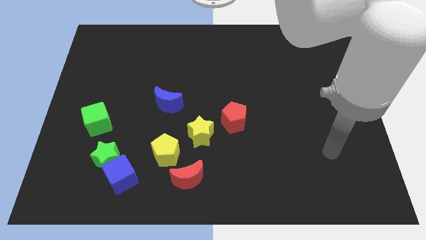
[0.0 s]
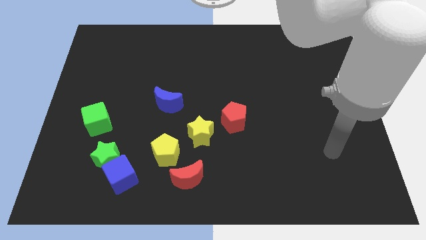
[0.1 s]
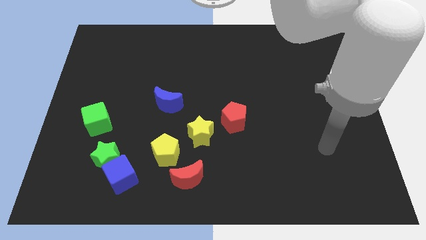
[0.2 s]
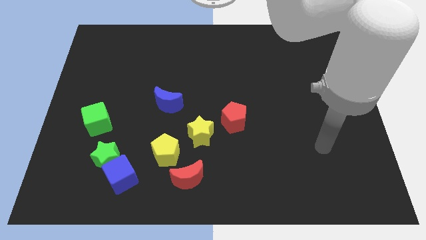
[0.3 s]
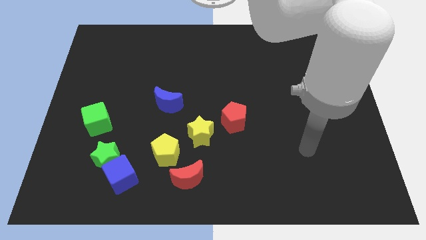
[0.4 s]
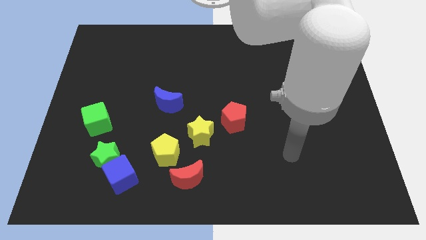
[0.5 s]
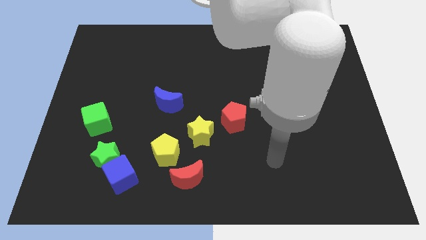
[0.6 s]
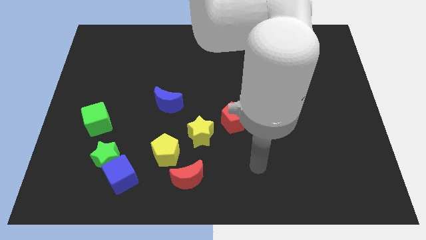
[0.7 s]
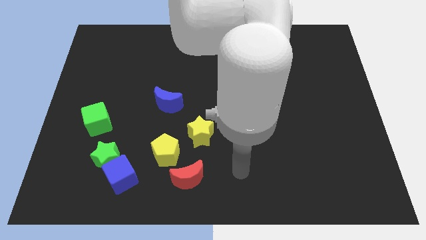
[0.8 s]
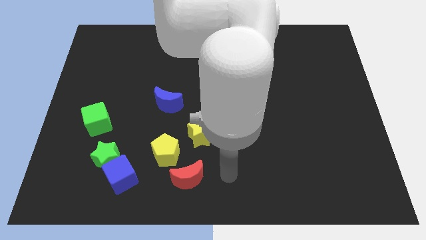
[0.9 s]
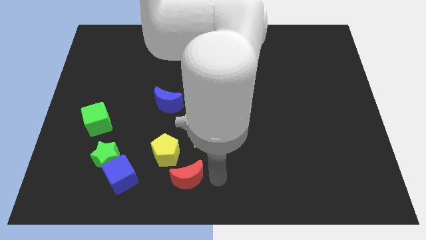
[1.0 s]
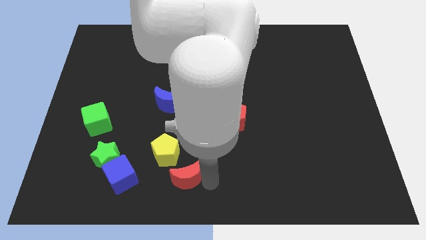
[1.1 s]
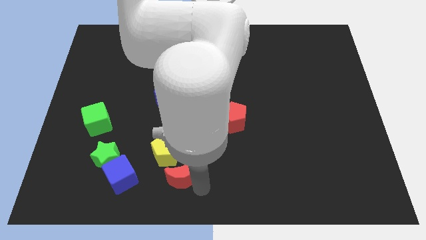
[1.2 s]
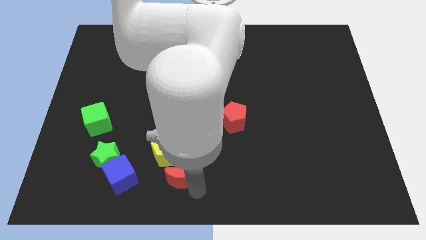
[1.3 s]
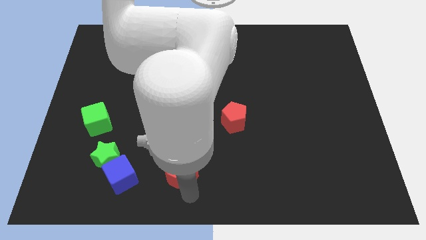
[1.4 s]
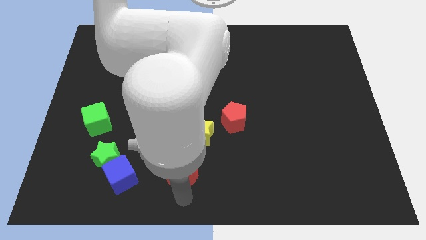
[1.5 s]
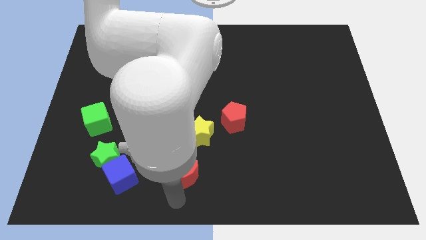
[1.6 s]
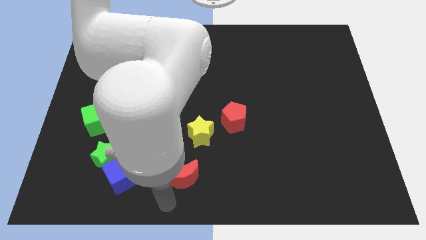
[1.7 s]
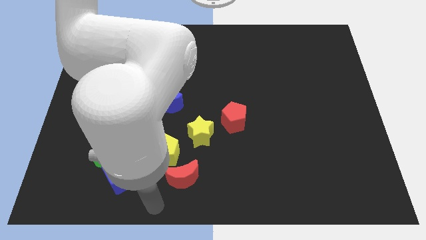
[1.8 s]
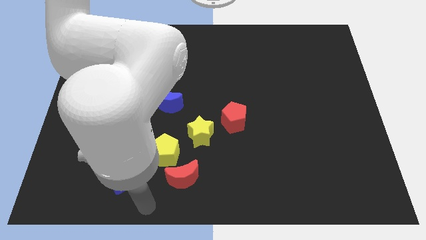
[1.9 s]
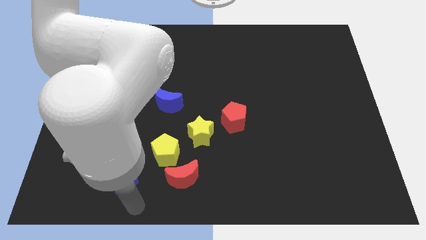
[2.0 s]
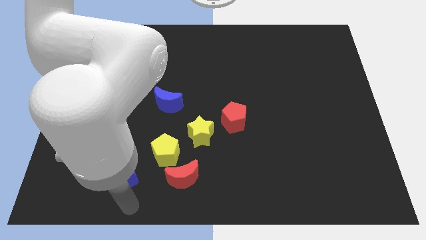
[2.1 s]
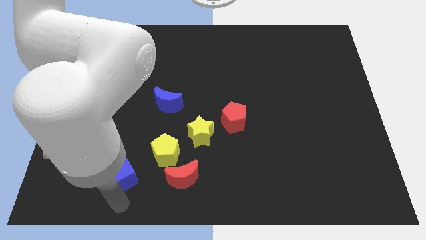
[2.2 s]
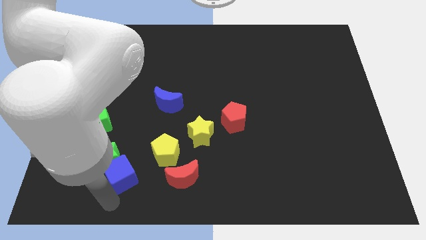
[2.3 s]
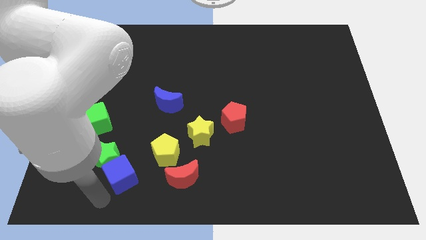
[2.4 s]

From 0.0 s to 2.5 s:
move the blue cube into the yellow pentagon

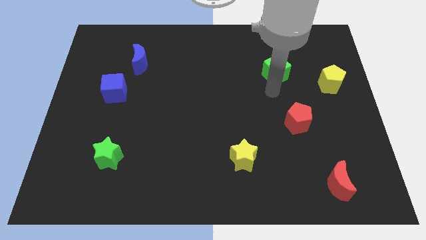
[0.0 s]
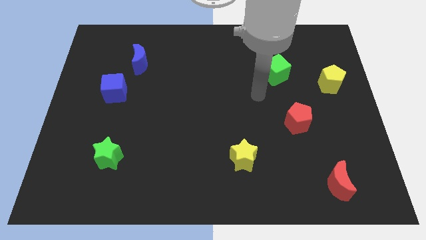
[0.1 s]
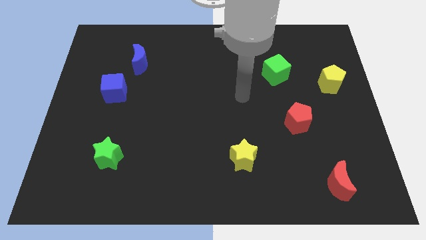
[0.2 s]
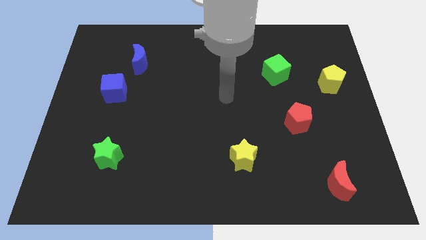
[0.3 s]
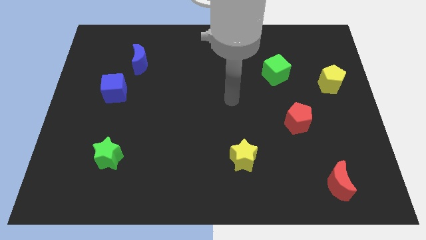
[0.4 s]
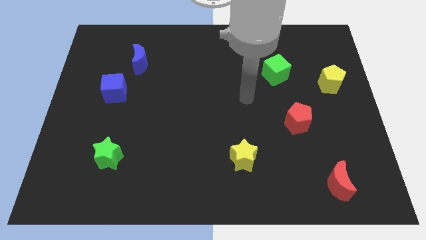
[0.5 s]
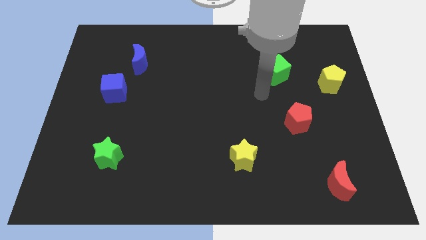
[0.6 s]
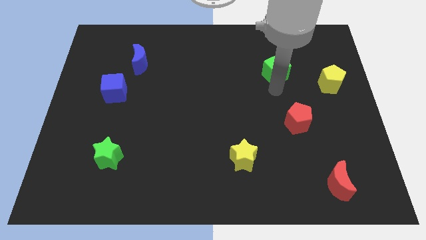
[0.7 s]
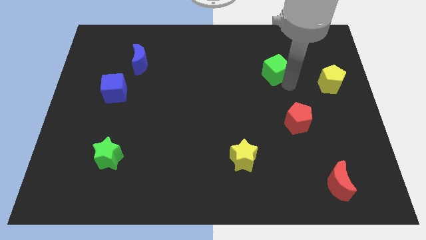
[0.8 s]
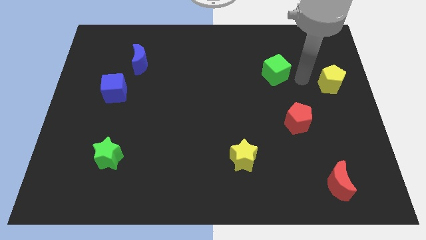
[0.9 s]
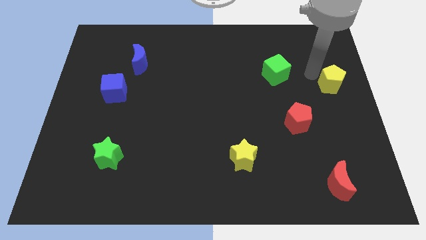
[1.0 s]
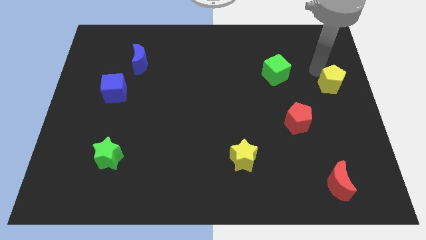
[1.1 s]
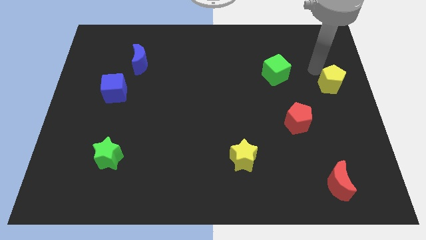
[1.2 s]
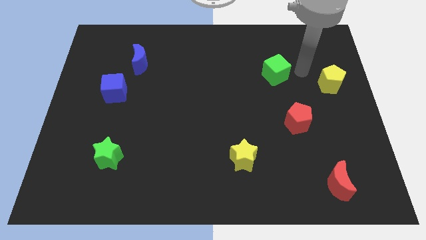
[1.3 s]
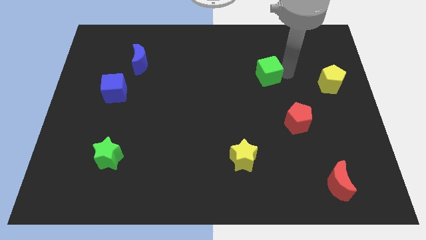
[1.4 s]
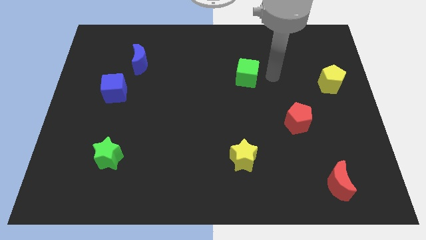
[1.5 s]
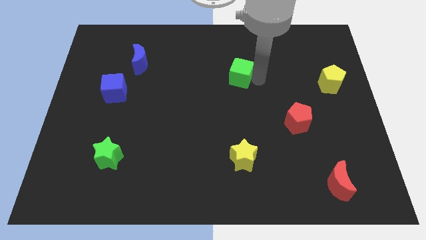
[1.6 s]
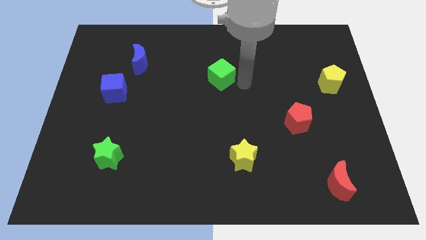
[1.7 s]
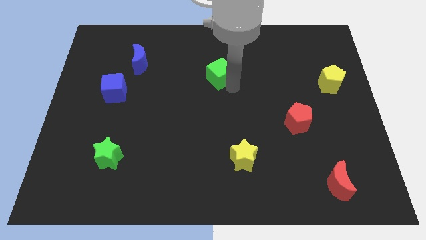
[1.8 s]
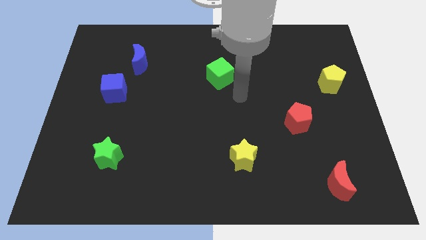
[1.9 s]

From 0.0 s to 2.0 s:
move the green cube to the center

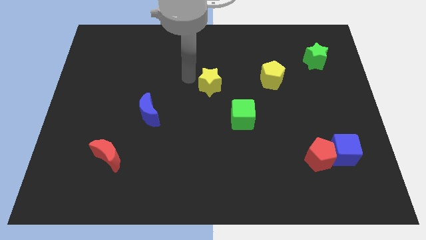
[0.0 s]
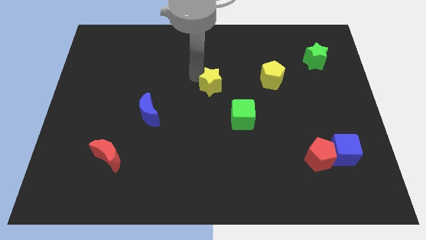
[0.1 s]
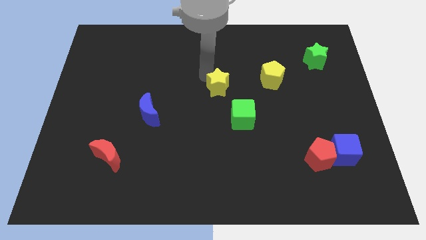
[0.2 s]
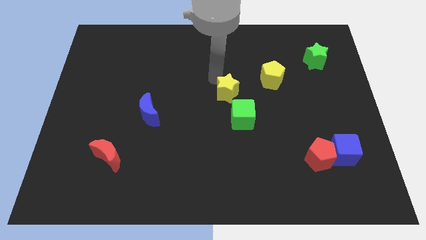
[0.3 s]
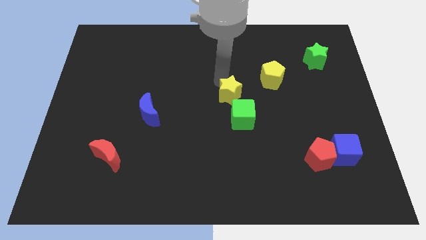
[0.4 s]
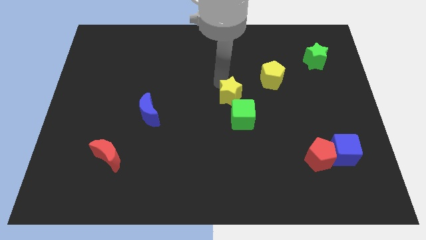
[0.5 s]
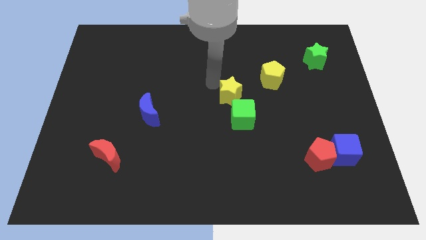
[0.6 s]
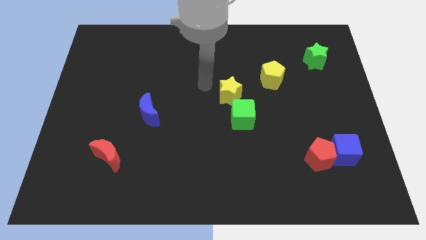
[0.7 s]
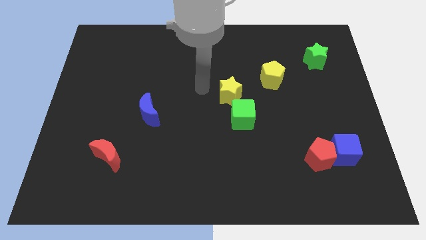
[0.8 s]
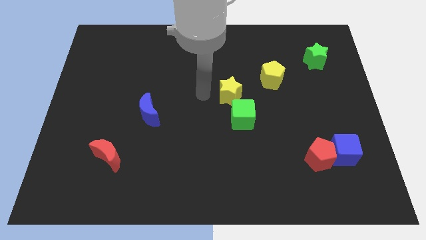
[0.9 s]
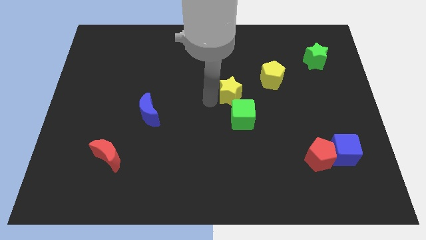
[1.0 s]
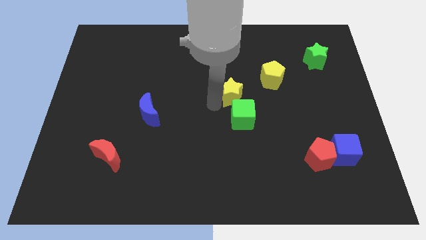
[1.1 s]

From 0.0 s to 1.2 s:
push the yellow star towards the top of the green cube

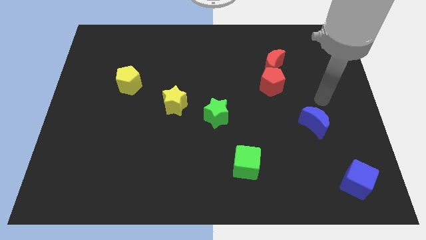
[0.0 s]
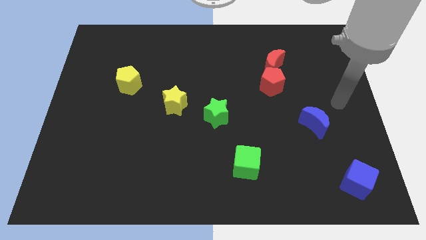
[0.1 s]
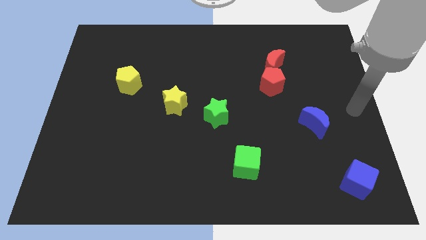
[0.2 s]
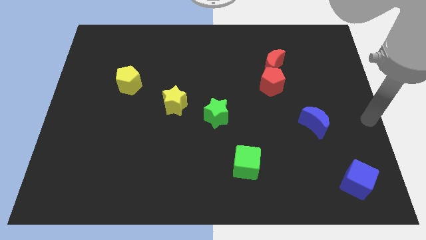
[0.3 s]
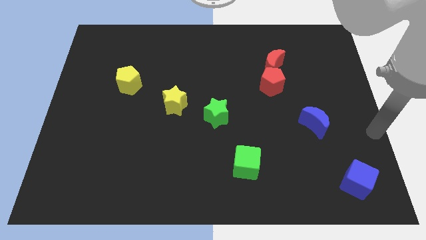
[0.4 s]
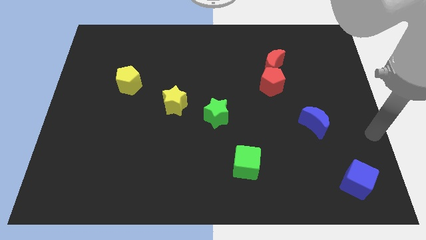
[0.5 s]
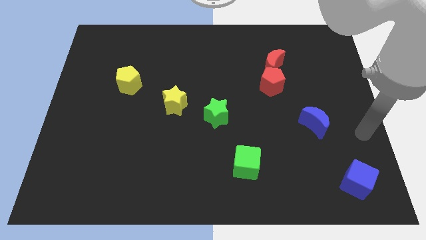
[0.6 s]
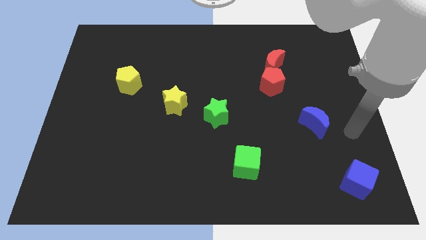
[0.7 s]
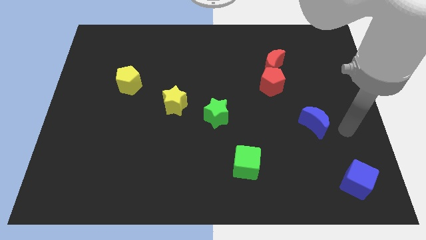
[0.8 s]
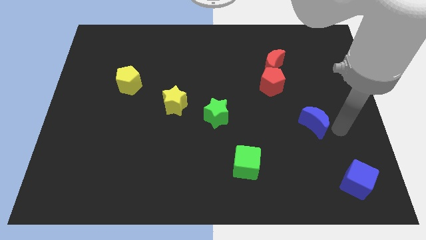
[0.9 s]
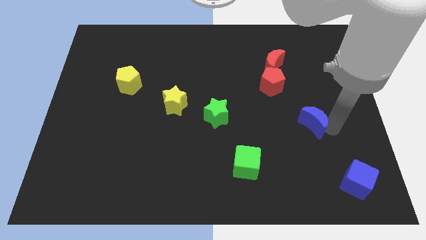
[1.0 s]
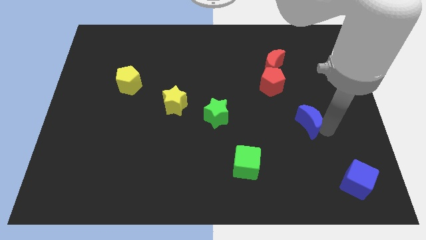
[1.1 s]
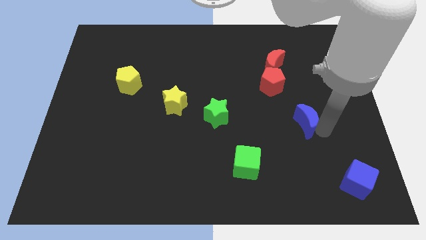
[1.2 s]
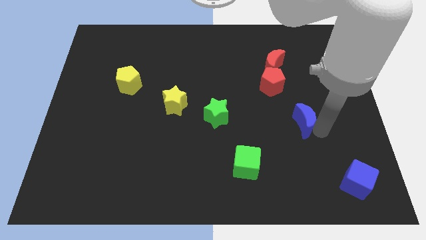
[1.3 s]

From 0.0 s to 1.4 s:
move blue moon slightly left

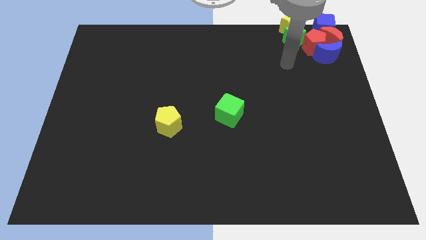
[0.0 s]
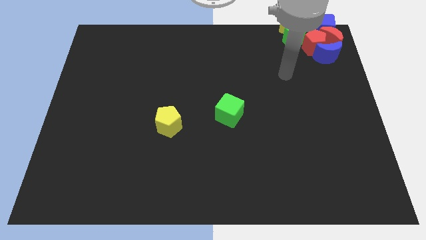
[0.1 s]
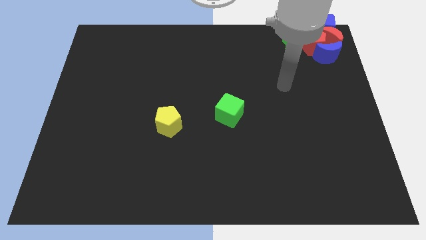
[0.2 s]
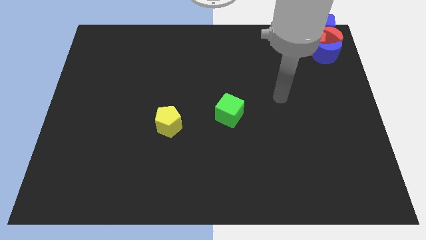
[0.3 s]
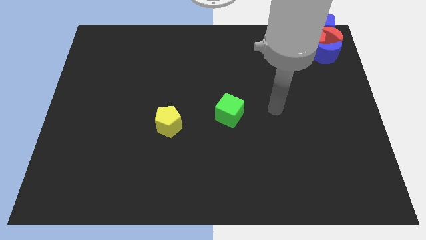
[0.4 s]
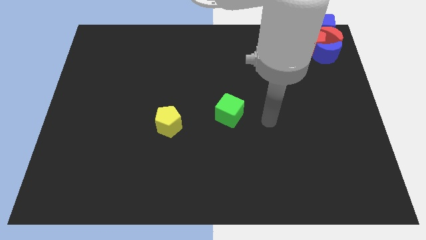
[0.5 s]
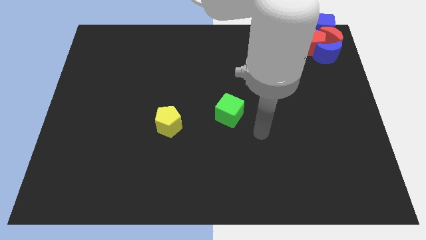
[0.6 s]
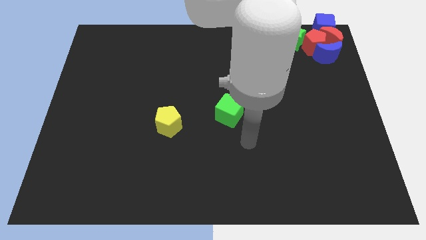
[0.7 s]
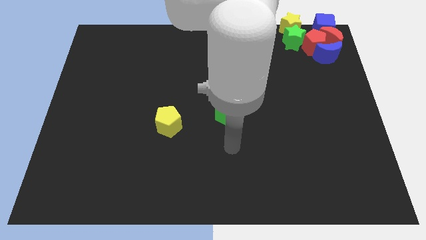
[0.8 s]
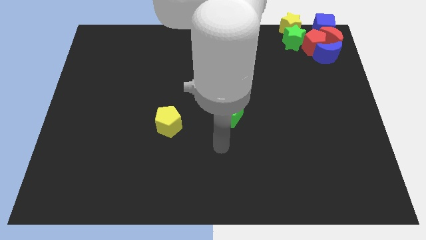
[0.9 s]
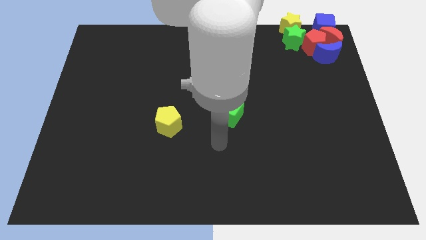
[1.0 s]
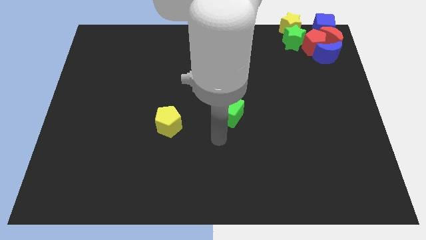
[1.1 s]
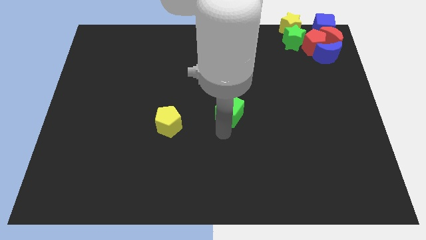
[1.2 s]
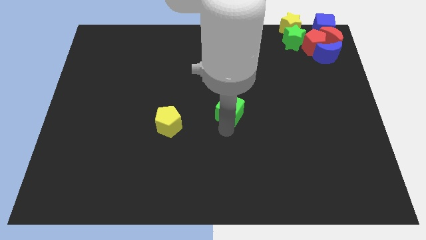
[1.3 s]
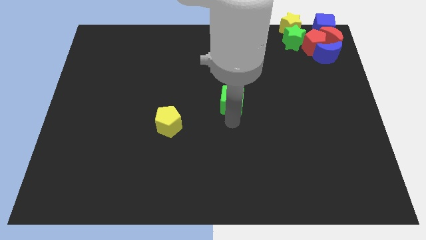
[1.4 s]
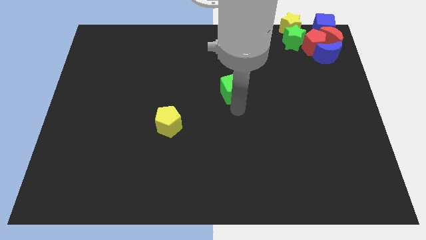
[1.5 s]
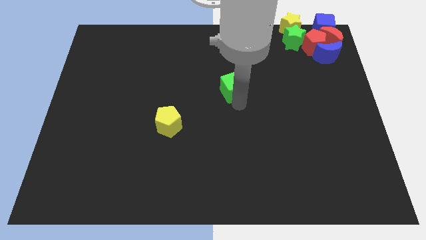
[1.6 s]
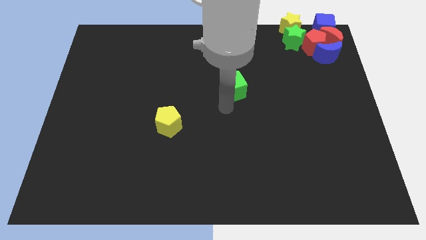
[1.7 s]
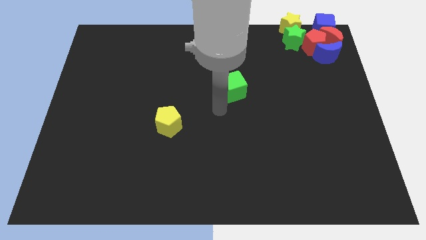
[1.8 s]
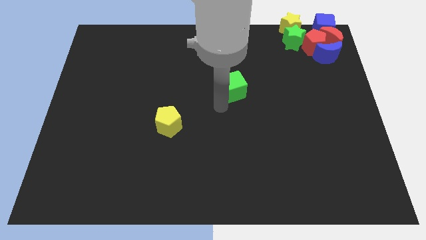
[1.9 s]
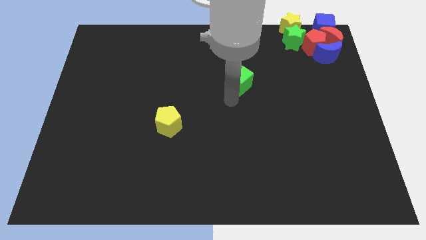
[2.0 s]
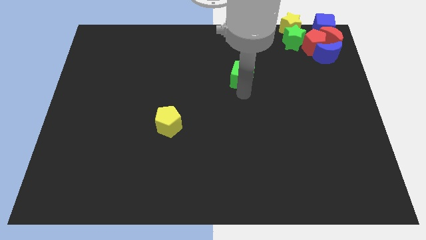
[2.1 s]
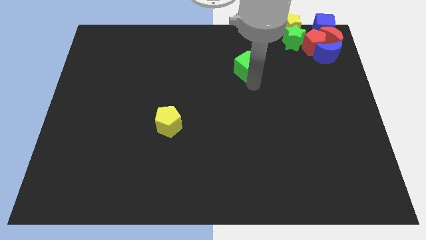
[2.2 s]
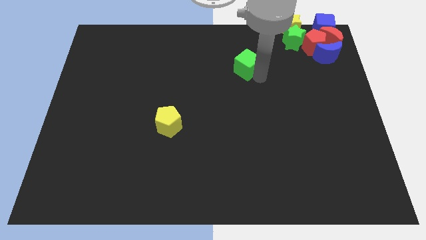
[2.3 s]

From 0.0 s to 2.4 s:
drag the green cube diagonal to yellow pentagon
